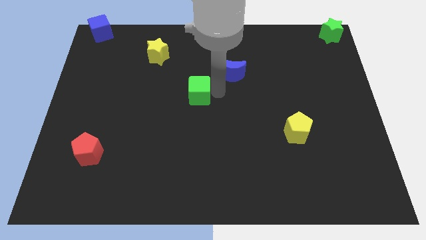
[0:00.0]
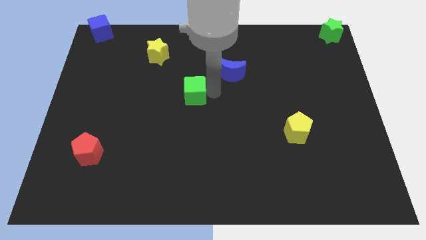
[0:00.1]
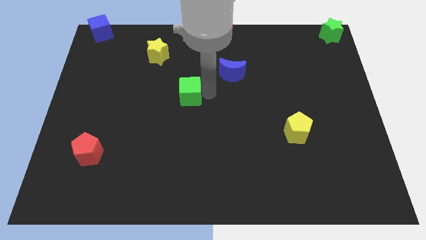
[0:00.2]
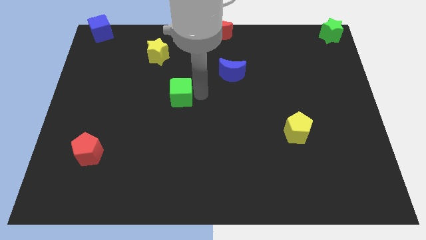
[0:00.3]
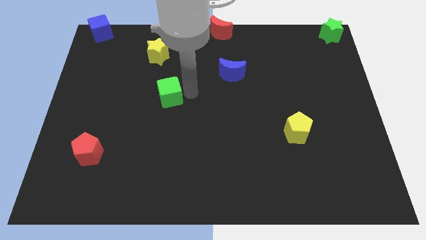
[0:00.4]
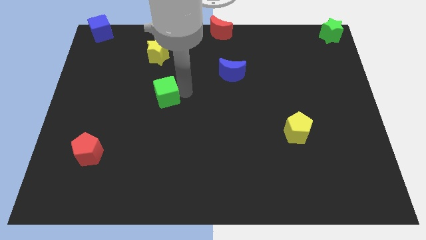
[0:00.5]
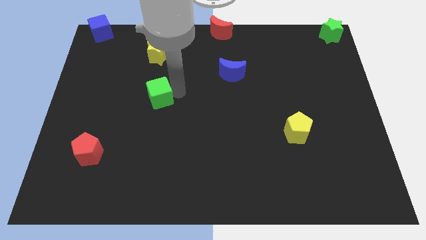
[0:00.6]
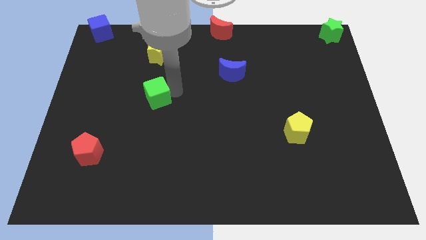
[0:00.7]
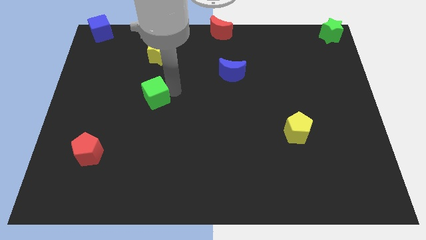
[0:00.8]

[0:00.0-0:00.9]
place the green cube to the bottom of the yellow star

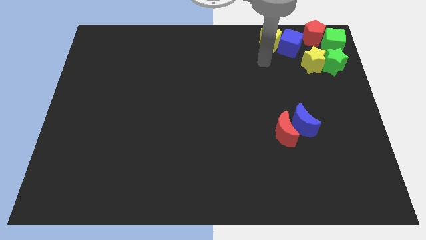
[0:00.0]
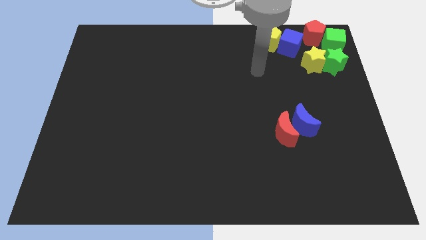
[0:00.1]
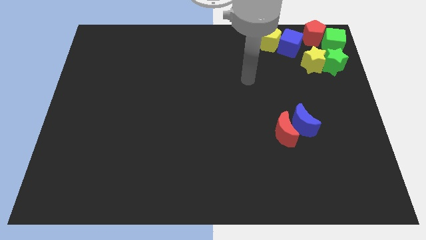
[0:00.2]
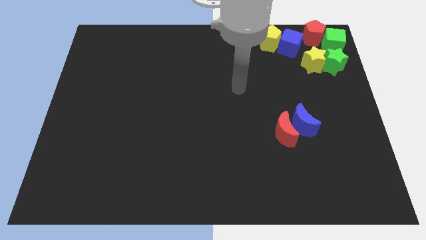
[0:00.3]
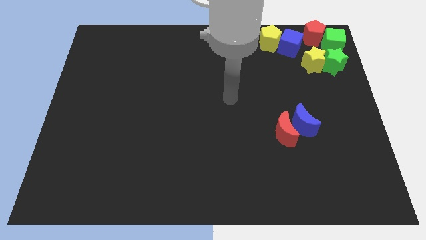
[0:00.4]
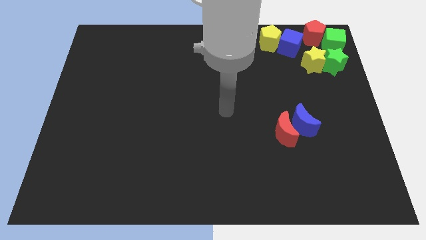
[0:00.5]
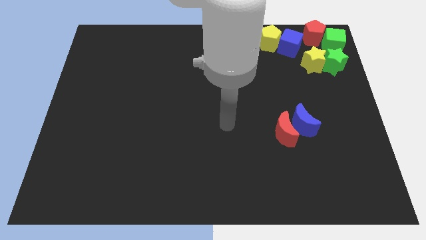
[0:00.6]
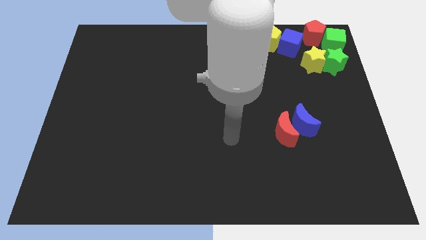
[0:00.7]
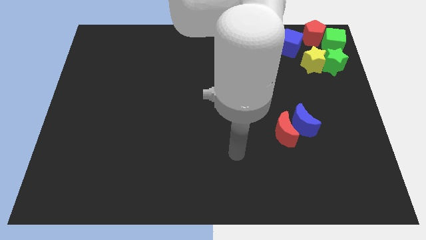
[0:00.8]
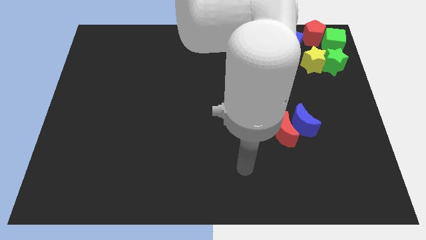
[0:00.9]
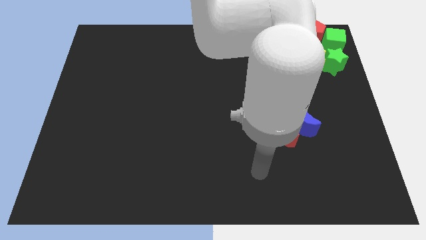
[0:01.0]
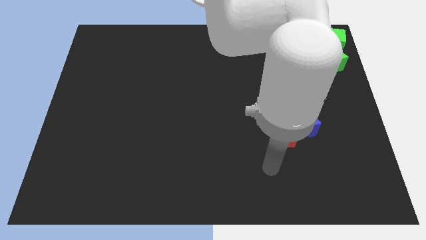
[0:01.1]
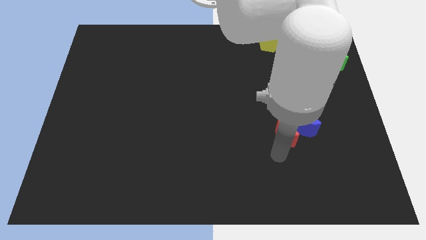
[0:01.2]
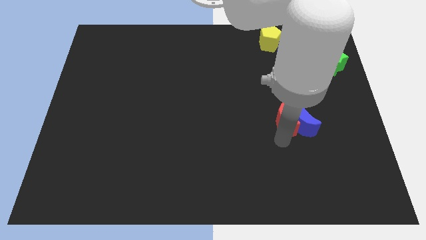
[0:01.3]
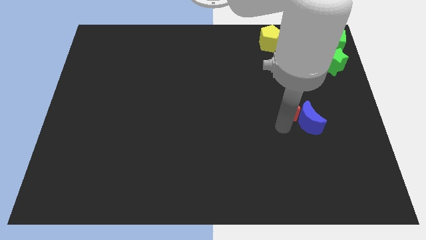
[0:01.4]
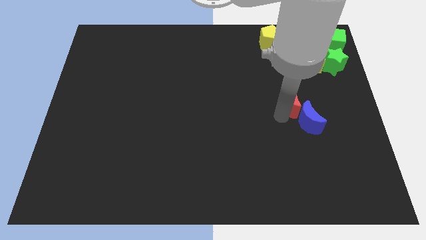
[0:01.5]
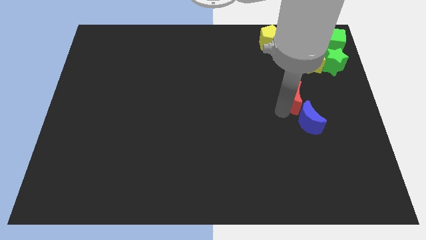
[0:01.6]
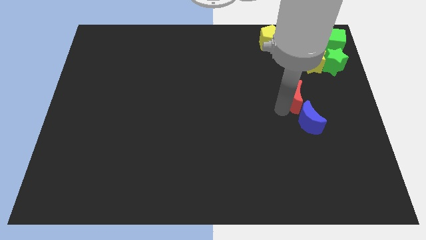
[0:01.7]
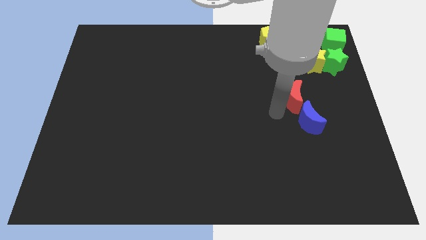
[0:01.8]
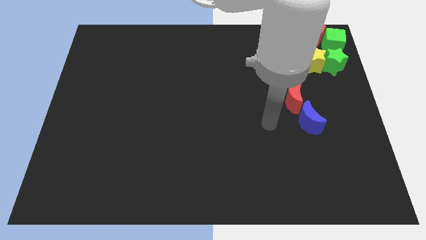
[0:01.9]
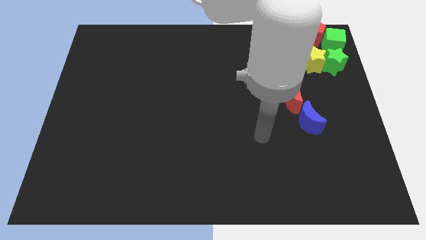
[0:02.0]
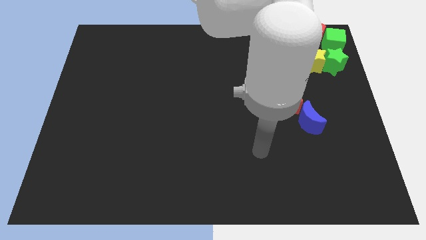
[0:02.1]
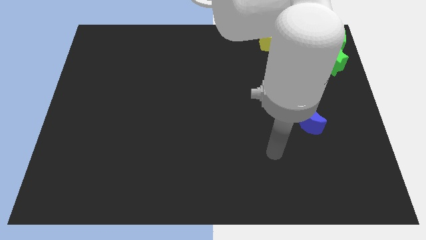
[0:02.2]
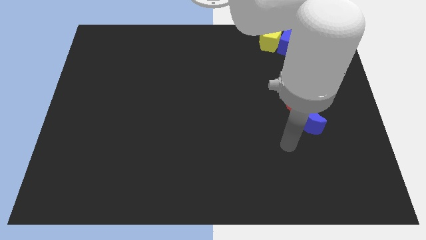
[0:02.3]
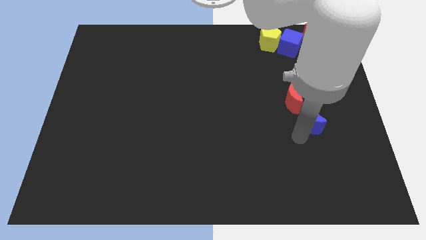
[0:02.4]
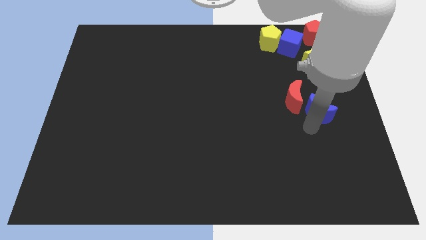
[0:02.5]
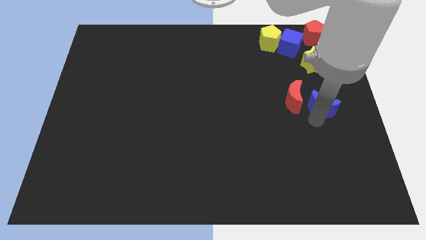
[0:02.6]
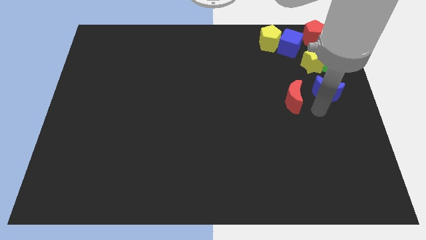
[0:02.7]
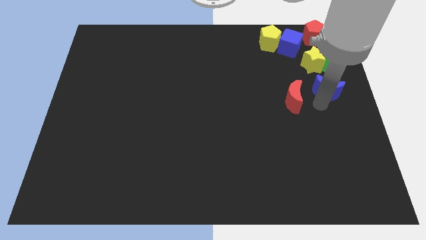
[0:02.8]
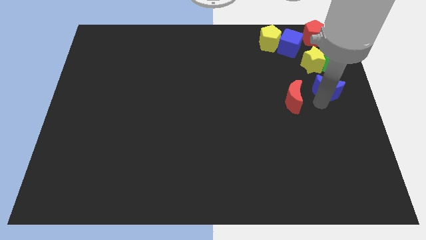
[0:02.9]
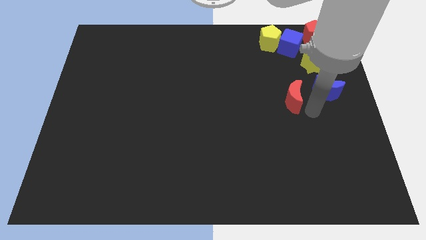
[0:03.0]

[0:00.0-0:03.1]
push the red and the blue crescents slightly to the top

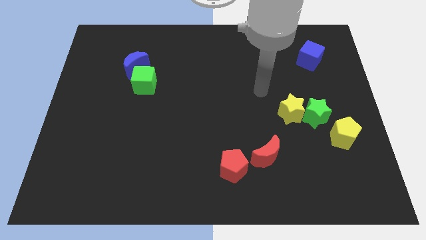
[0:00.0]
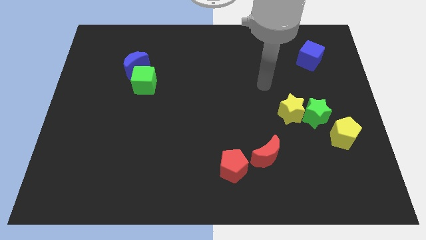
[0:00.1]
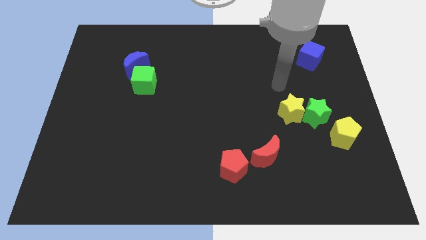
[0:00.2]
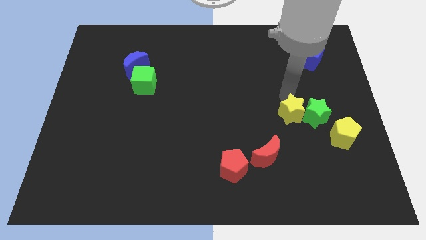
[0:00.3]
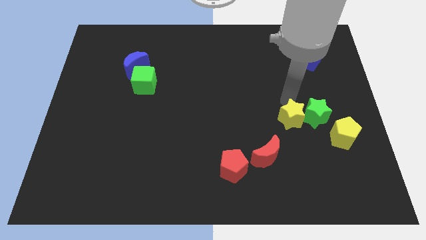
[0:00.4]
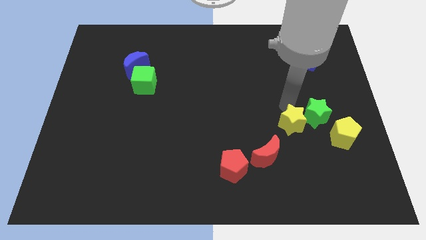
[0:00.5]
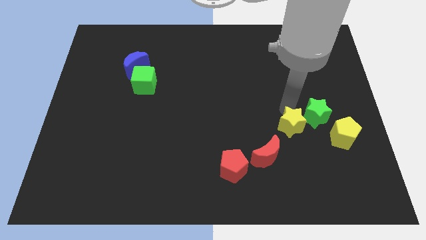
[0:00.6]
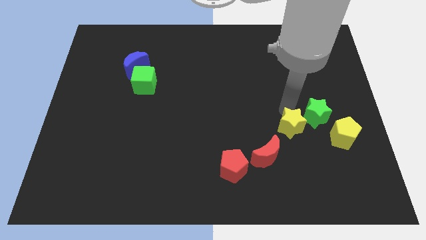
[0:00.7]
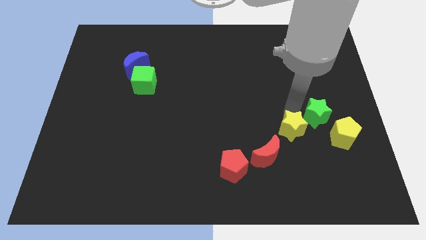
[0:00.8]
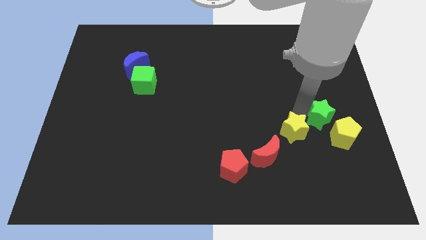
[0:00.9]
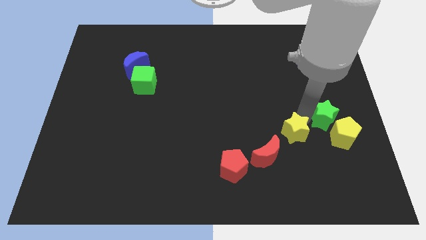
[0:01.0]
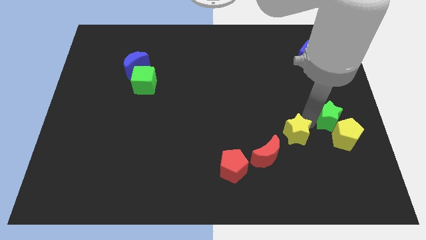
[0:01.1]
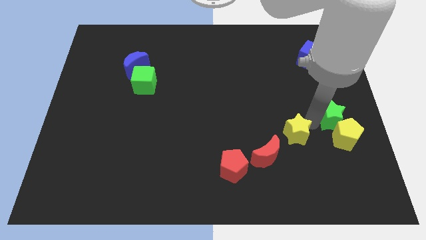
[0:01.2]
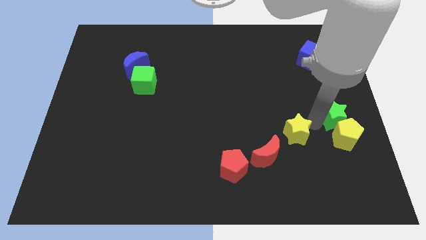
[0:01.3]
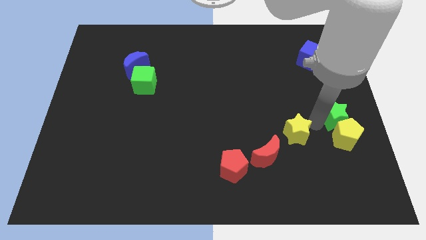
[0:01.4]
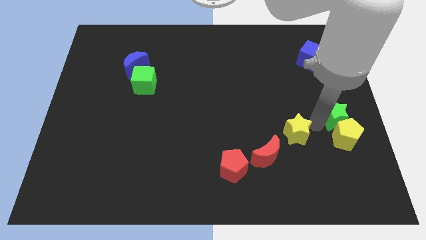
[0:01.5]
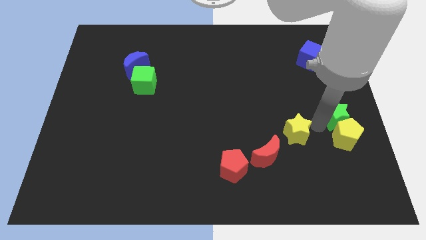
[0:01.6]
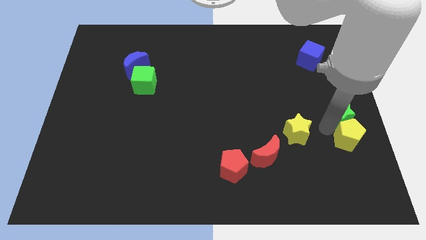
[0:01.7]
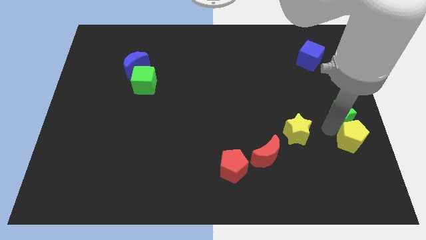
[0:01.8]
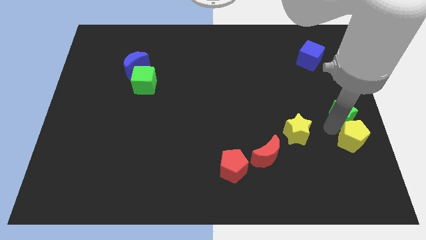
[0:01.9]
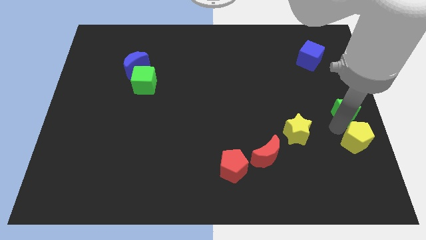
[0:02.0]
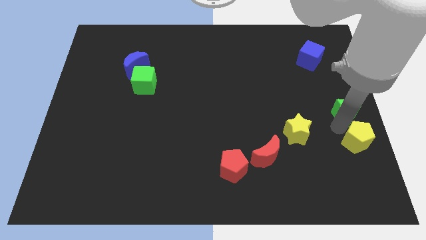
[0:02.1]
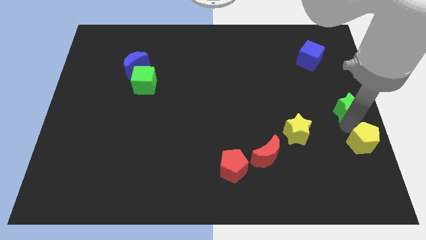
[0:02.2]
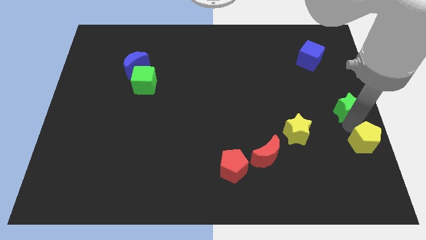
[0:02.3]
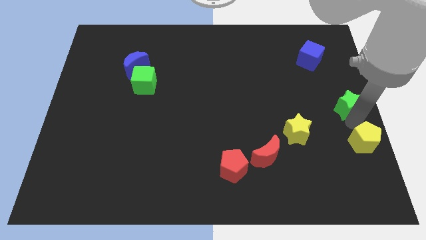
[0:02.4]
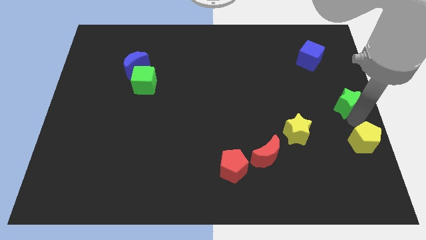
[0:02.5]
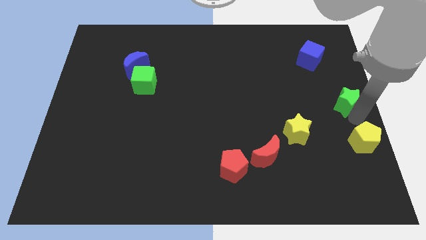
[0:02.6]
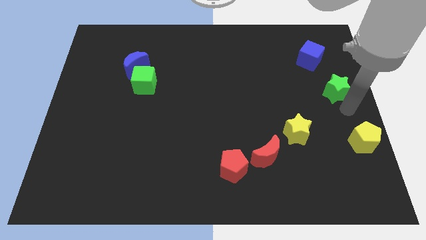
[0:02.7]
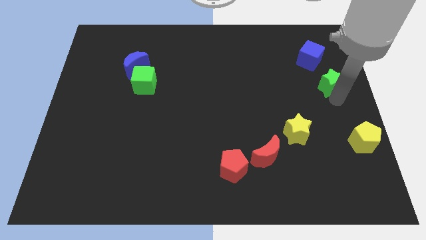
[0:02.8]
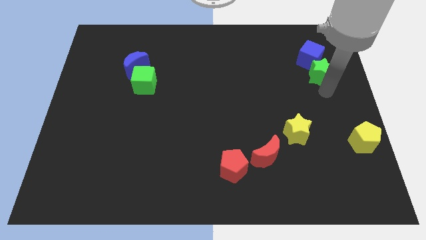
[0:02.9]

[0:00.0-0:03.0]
place green star below the blue cube

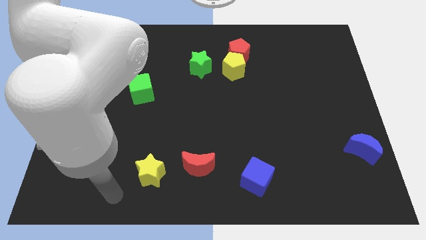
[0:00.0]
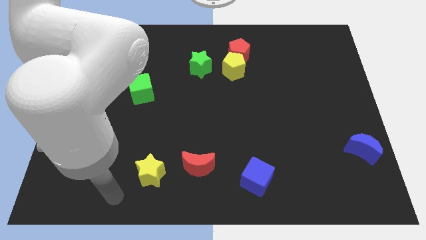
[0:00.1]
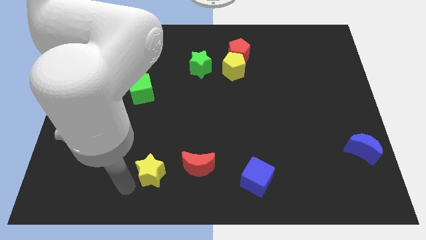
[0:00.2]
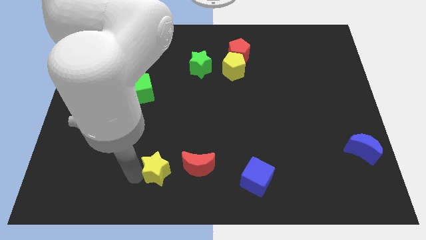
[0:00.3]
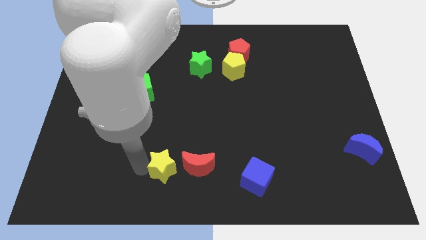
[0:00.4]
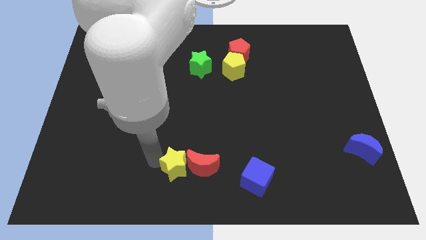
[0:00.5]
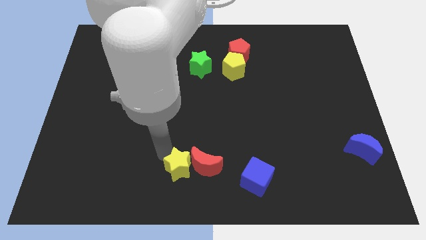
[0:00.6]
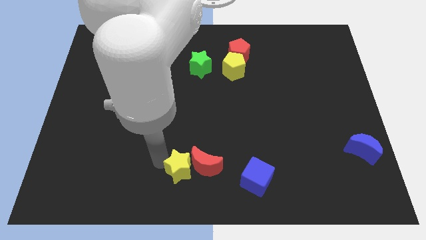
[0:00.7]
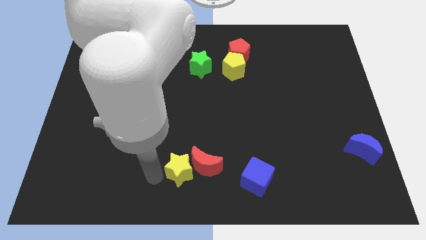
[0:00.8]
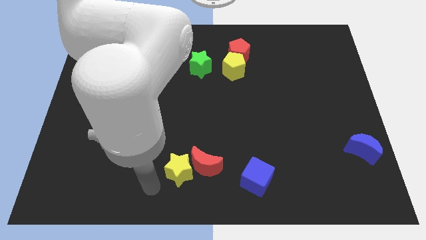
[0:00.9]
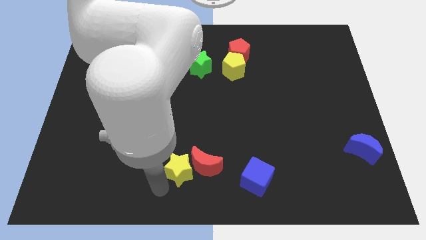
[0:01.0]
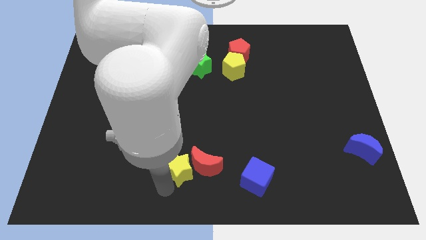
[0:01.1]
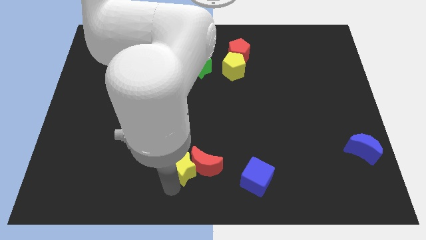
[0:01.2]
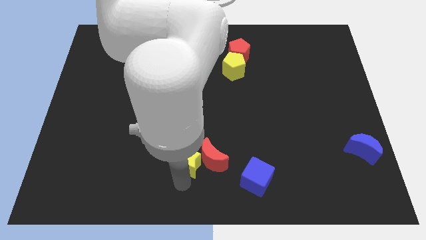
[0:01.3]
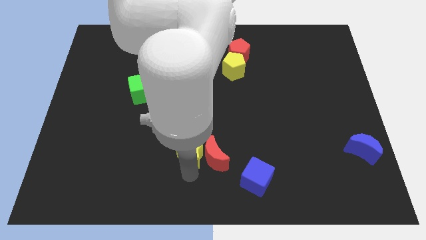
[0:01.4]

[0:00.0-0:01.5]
push the yellow star into the red crescent

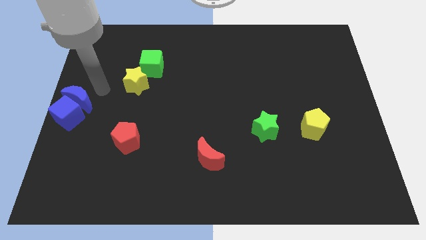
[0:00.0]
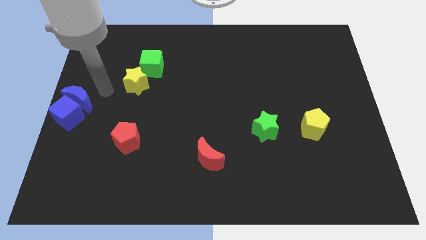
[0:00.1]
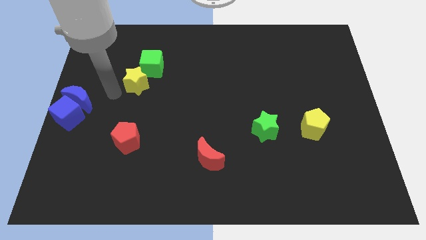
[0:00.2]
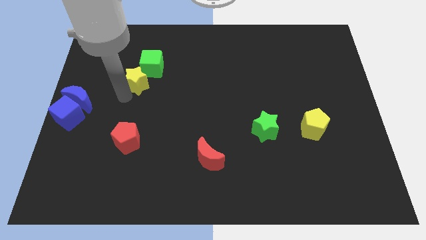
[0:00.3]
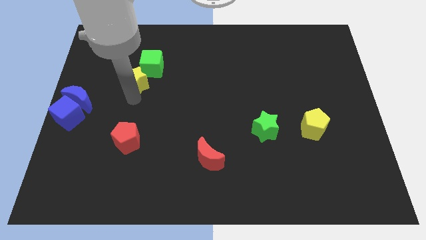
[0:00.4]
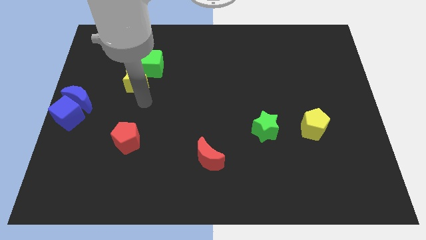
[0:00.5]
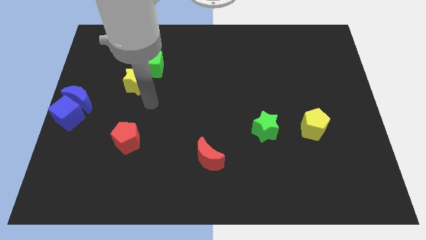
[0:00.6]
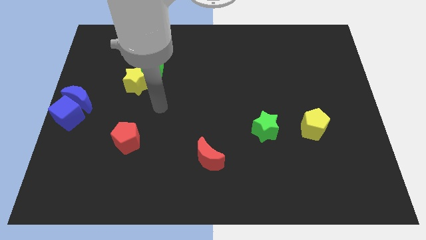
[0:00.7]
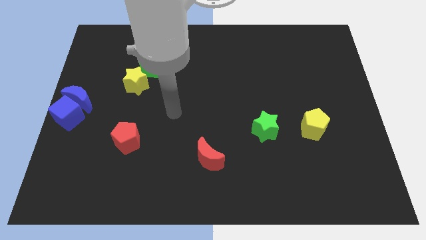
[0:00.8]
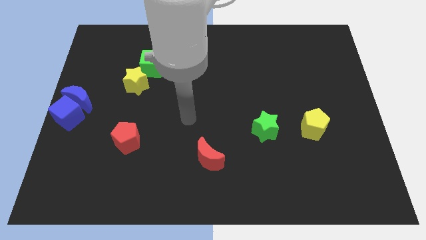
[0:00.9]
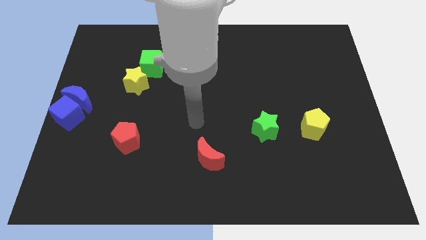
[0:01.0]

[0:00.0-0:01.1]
slide your arm to the center
